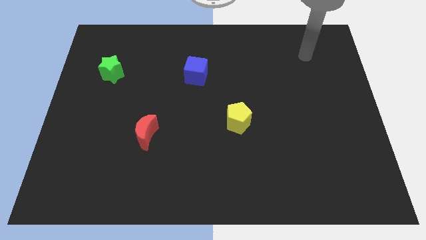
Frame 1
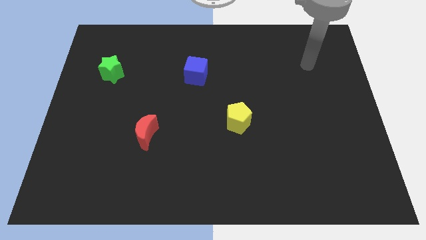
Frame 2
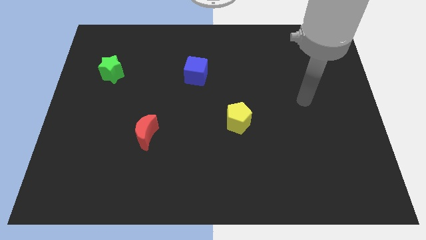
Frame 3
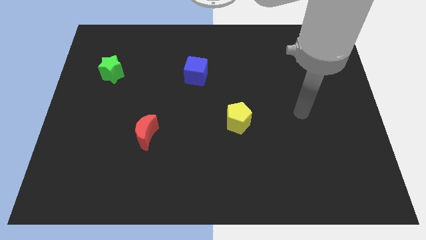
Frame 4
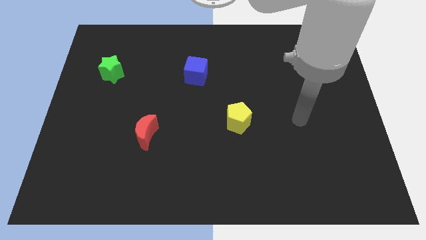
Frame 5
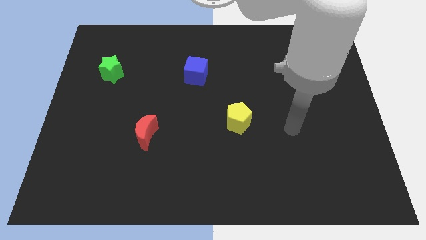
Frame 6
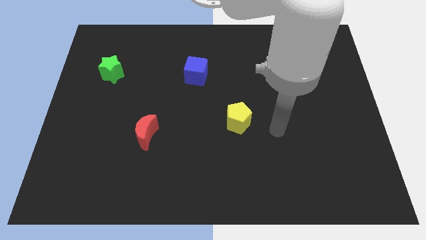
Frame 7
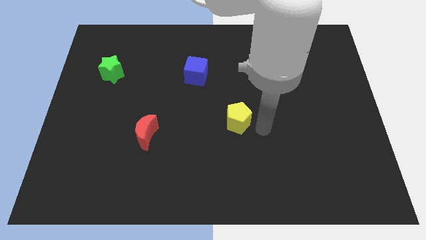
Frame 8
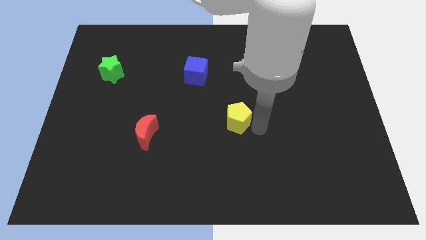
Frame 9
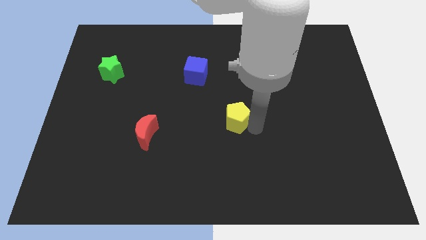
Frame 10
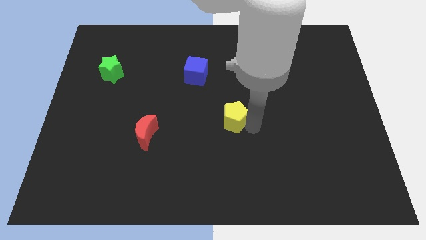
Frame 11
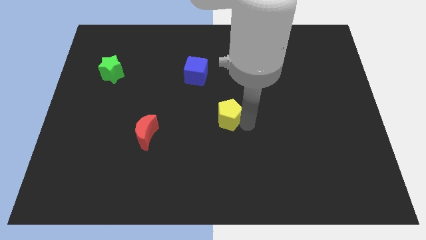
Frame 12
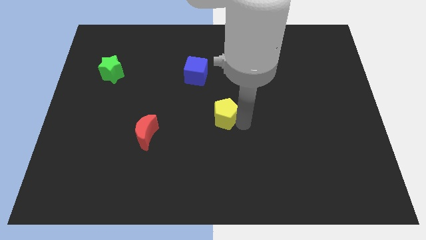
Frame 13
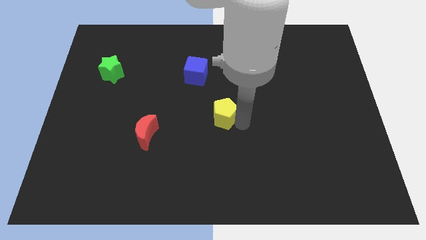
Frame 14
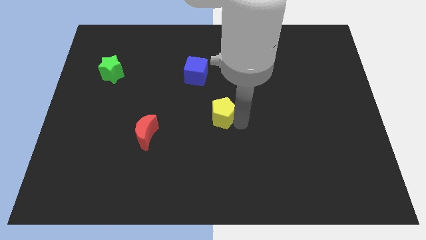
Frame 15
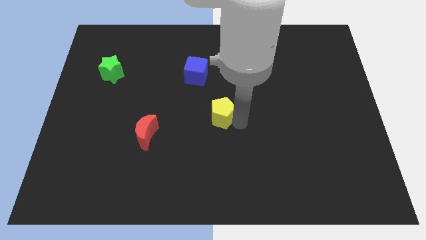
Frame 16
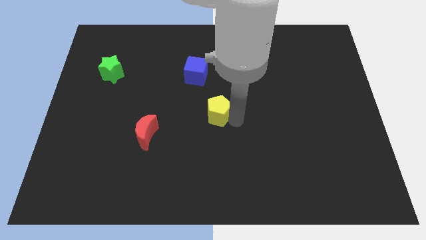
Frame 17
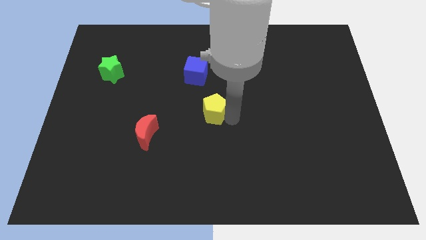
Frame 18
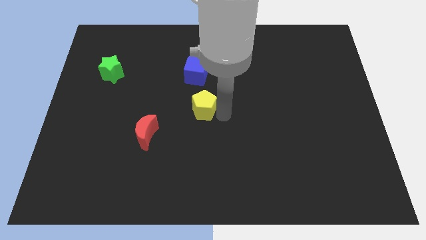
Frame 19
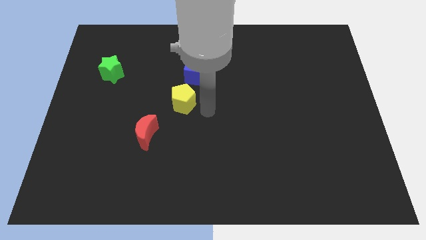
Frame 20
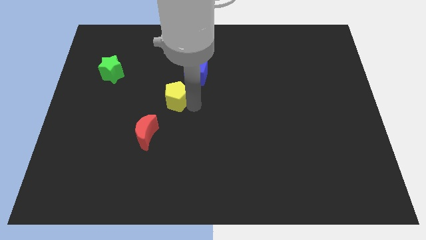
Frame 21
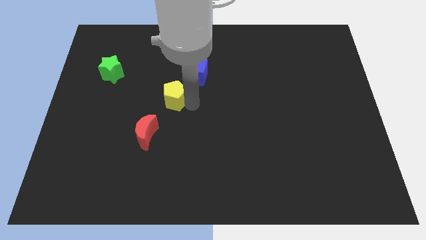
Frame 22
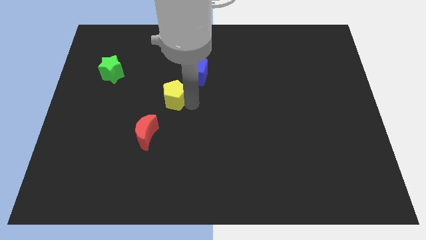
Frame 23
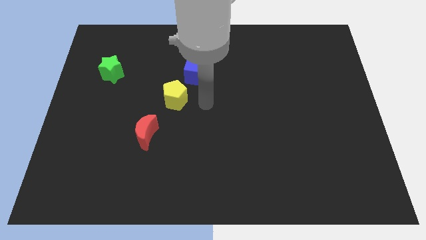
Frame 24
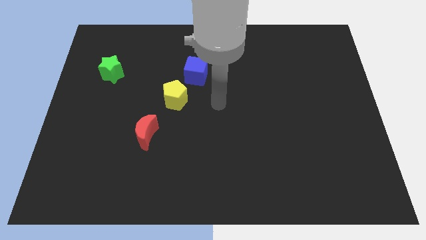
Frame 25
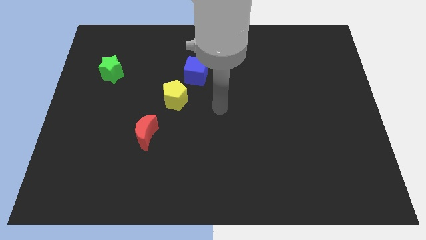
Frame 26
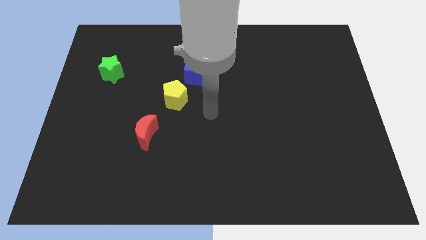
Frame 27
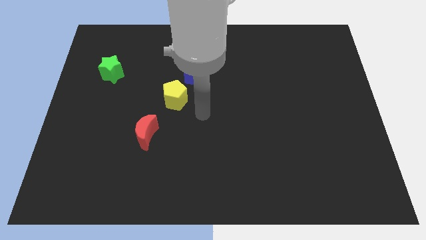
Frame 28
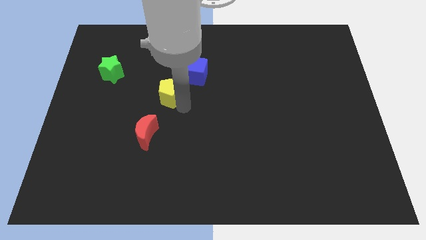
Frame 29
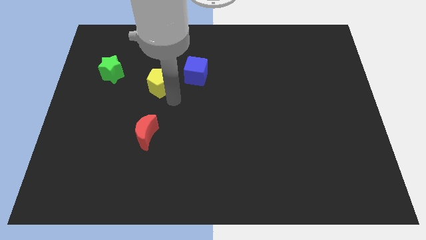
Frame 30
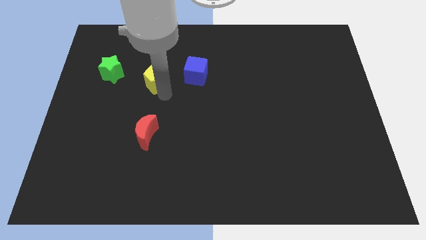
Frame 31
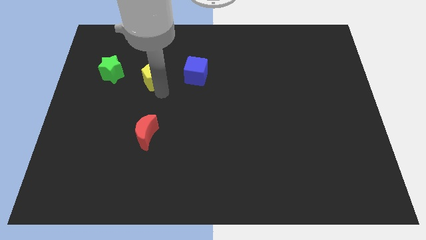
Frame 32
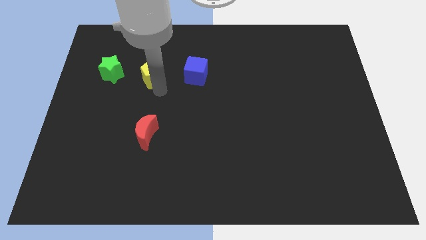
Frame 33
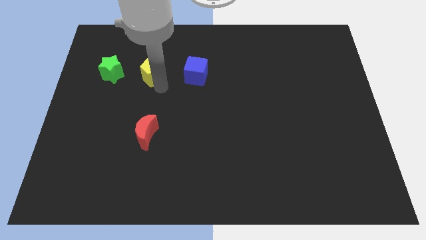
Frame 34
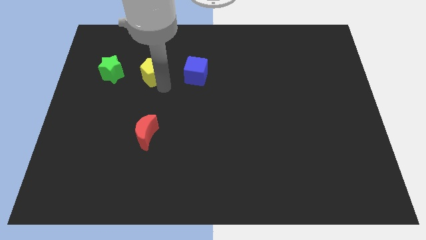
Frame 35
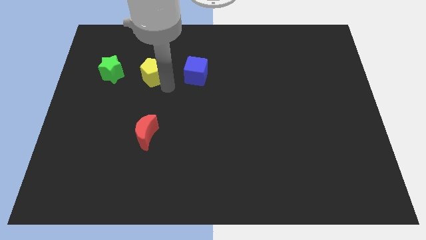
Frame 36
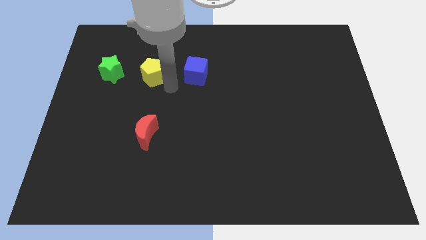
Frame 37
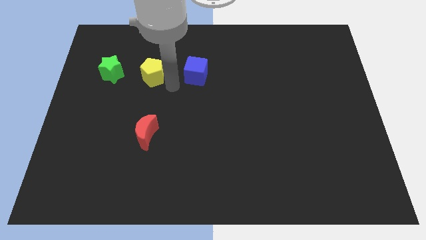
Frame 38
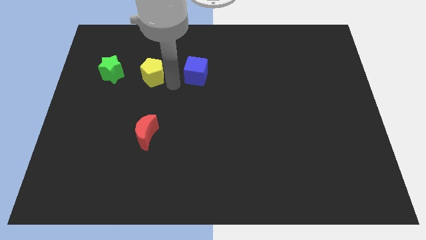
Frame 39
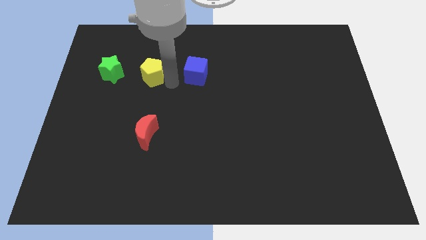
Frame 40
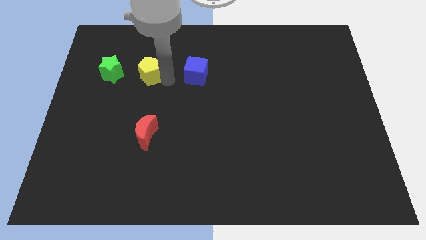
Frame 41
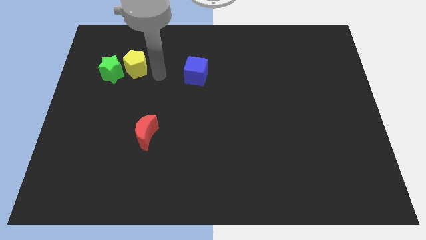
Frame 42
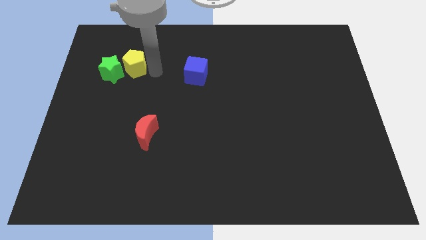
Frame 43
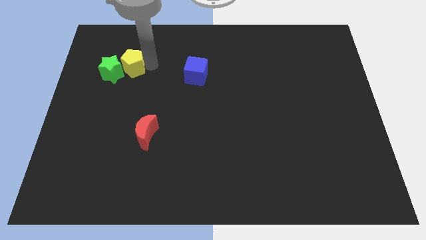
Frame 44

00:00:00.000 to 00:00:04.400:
move the pentagon to the green star

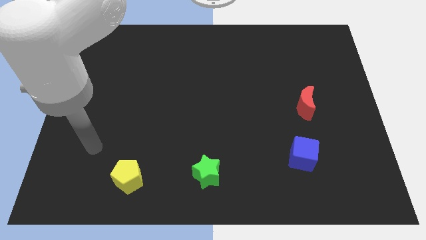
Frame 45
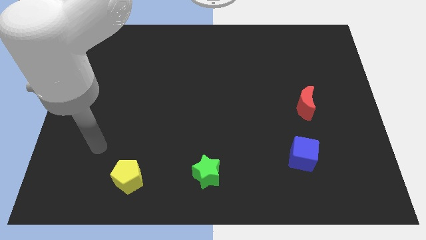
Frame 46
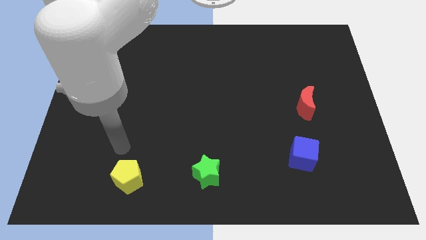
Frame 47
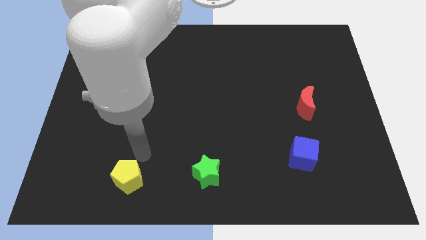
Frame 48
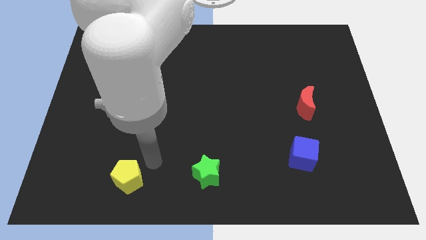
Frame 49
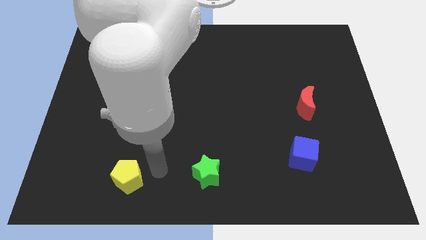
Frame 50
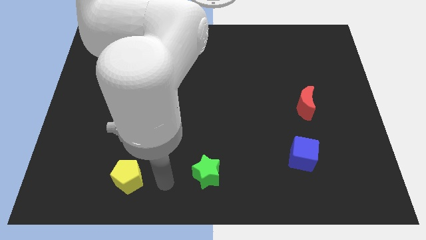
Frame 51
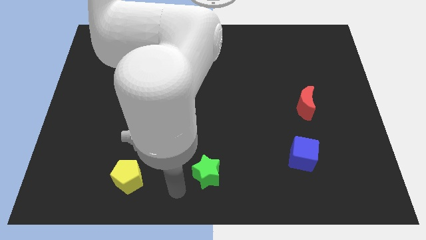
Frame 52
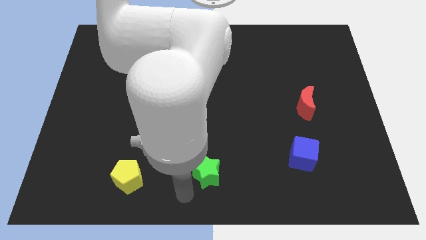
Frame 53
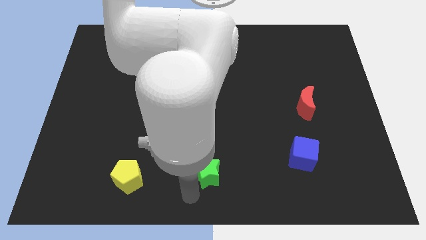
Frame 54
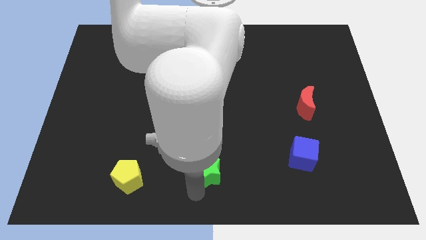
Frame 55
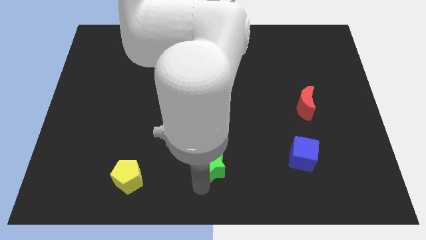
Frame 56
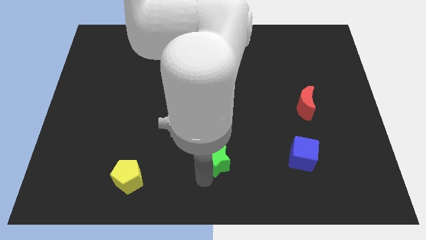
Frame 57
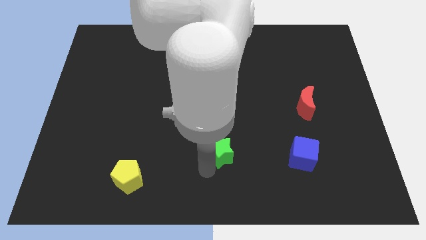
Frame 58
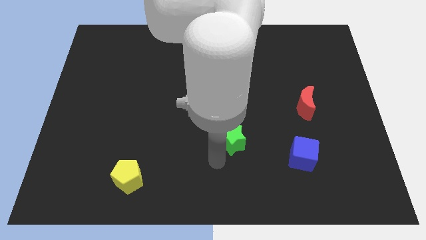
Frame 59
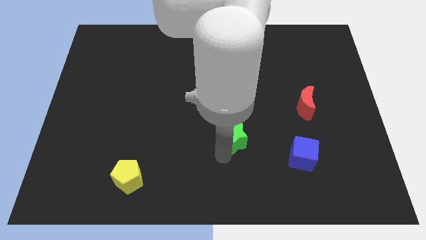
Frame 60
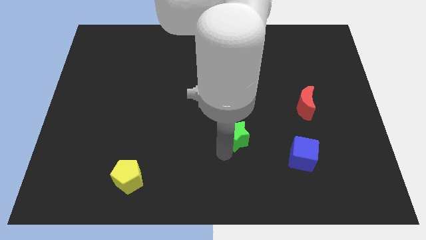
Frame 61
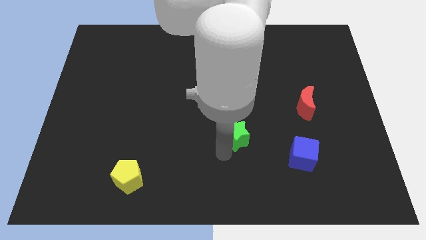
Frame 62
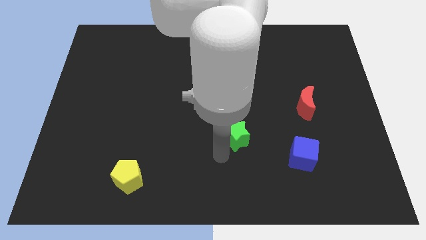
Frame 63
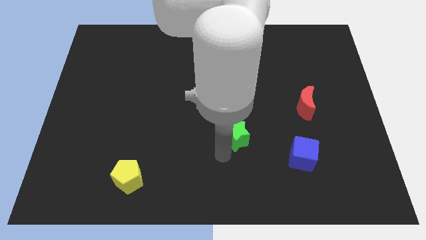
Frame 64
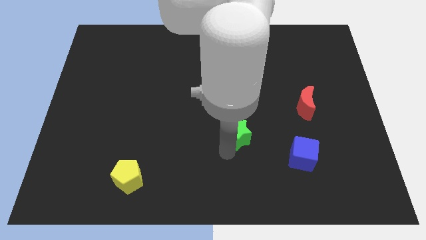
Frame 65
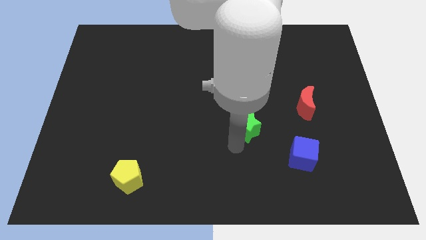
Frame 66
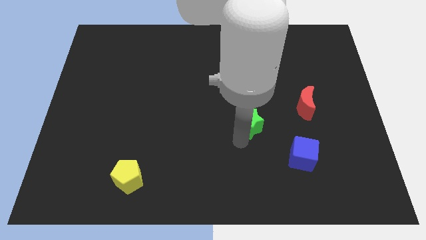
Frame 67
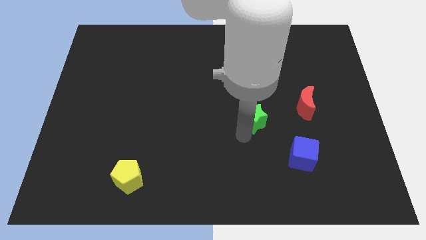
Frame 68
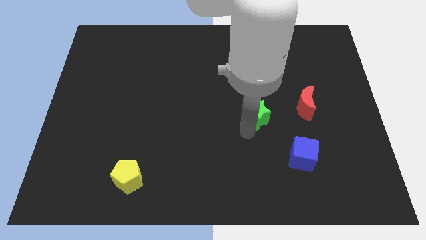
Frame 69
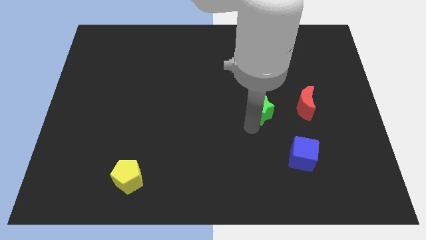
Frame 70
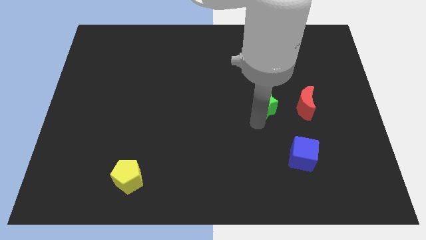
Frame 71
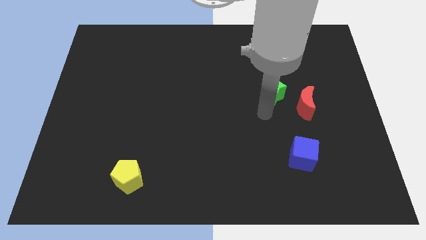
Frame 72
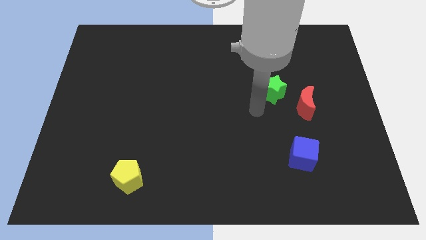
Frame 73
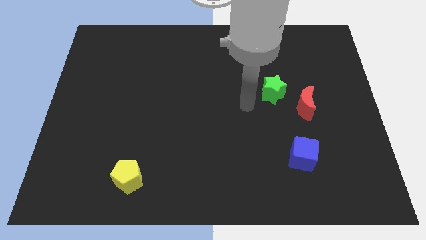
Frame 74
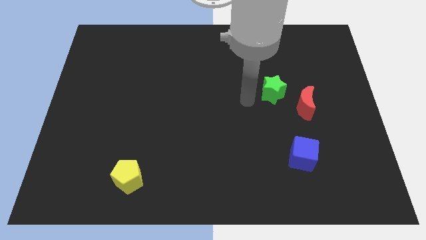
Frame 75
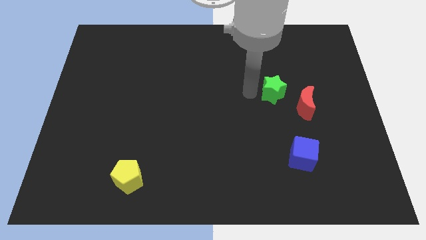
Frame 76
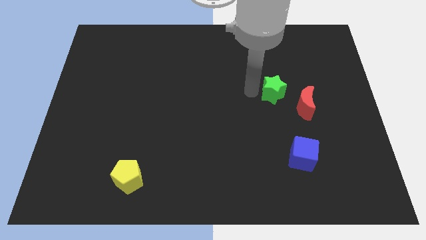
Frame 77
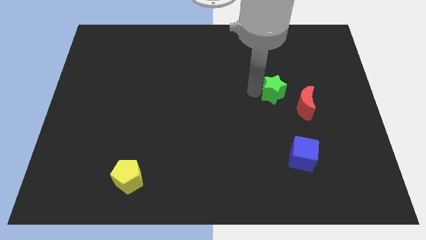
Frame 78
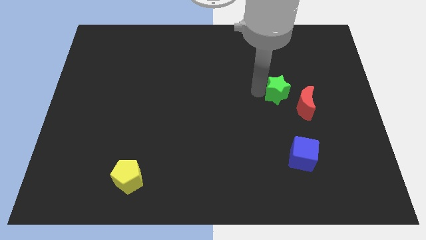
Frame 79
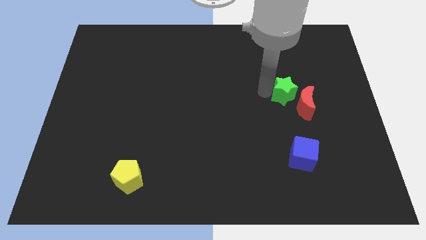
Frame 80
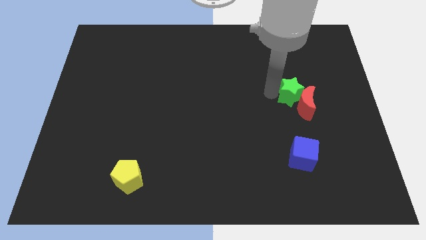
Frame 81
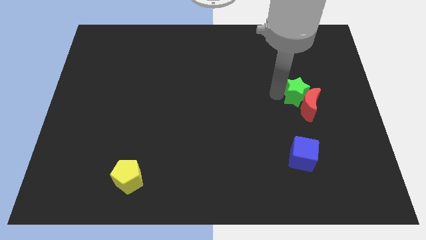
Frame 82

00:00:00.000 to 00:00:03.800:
slide the green block next to the red moon

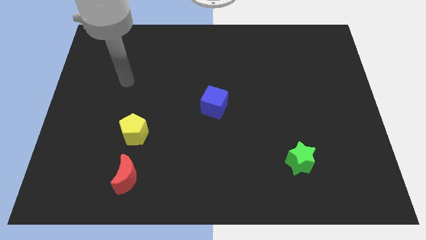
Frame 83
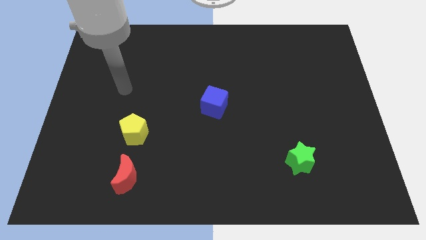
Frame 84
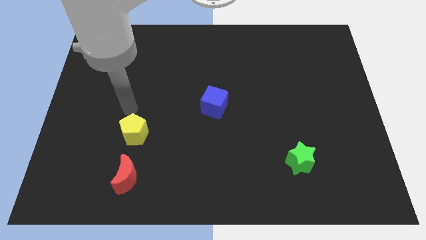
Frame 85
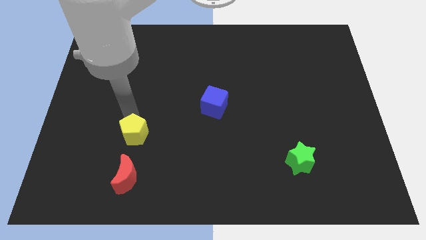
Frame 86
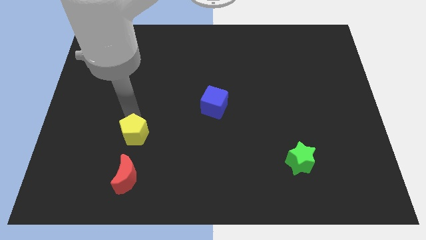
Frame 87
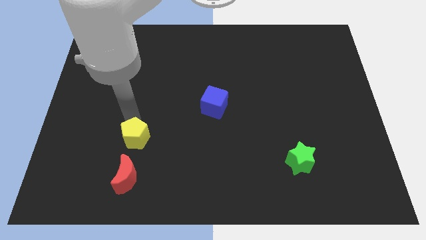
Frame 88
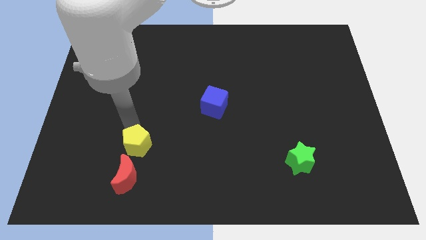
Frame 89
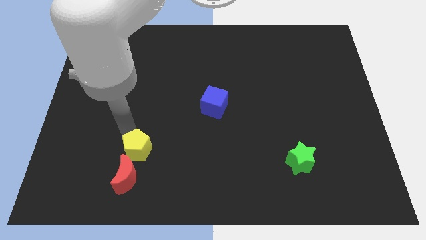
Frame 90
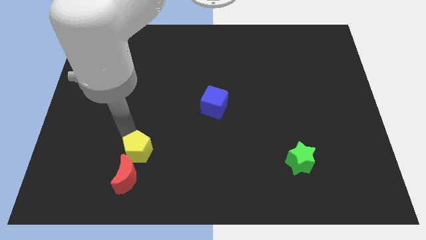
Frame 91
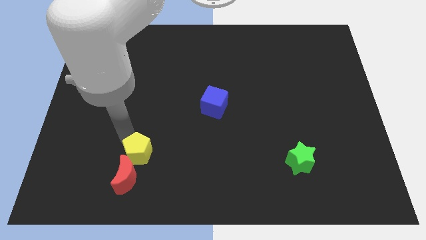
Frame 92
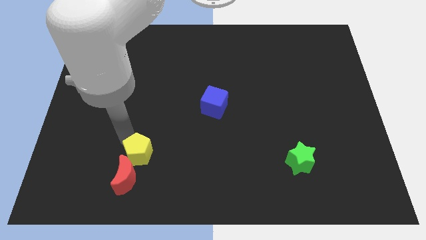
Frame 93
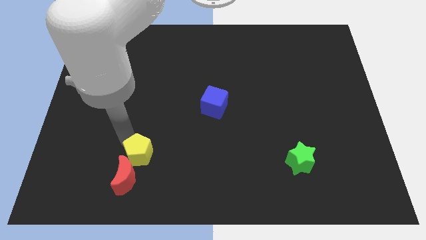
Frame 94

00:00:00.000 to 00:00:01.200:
slide the yellow block next to the moon
